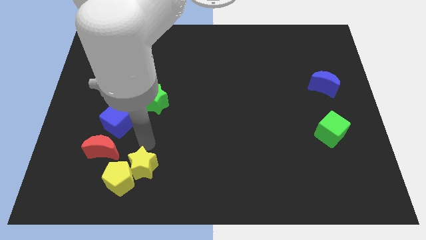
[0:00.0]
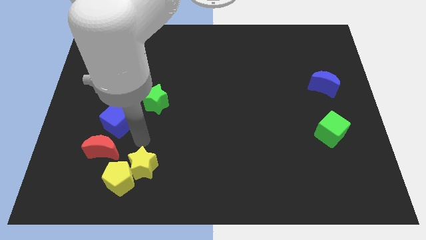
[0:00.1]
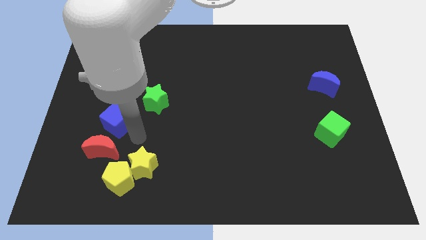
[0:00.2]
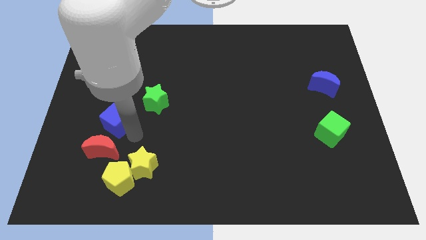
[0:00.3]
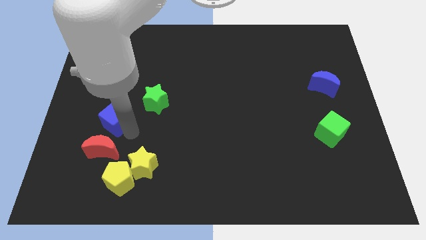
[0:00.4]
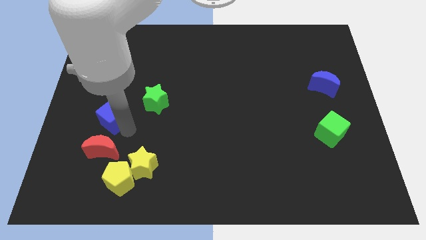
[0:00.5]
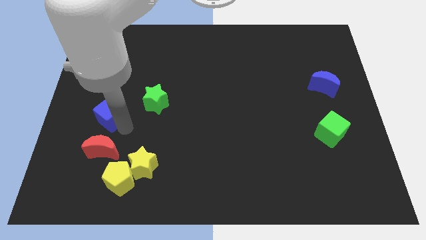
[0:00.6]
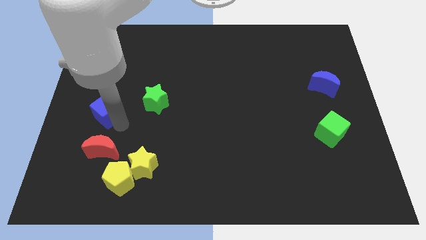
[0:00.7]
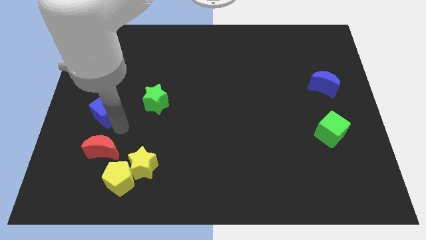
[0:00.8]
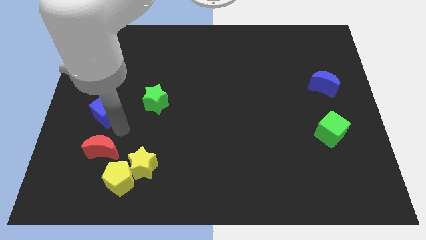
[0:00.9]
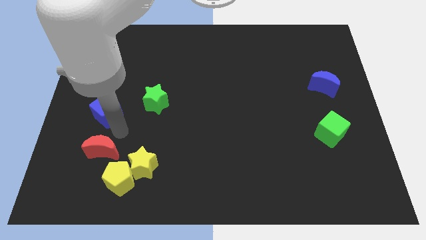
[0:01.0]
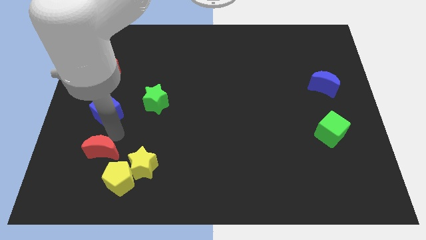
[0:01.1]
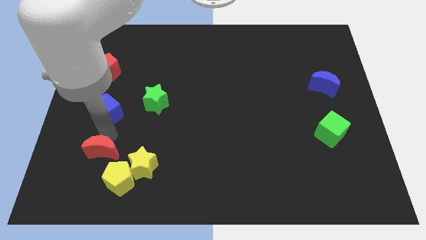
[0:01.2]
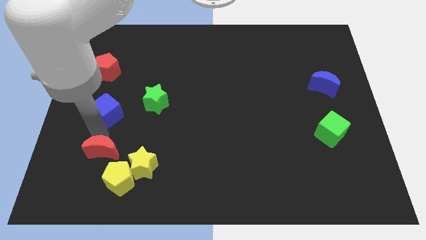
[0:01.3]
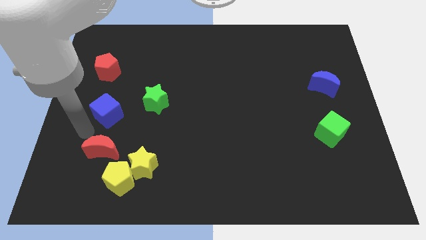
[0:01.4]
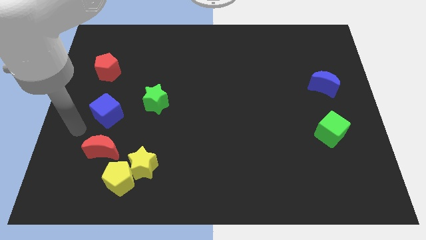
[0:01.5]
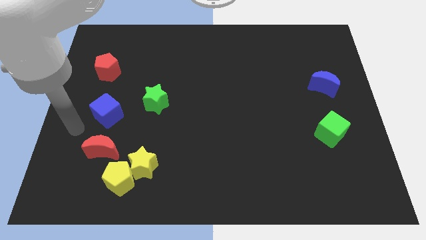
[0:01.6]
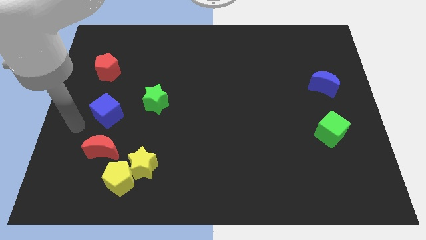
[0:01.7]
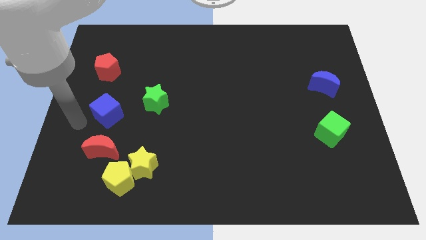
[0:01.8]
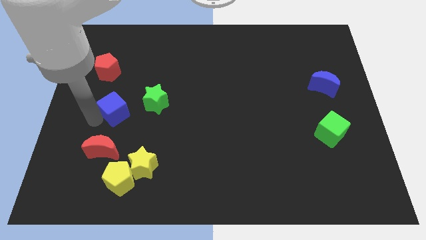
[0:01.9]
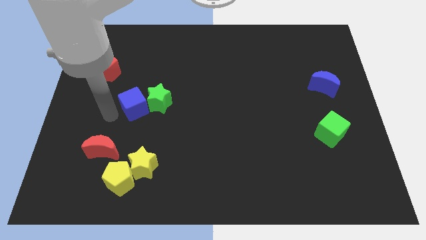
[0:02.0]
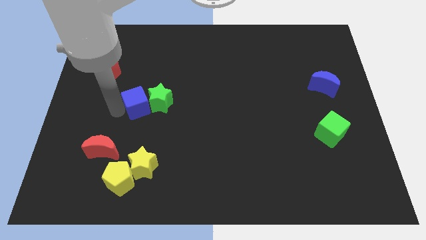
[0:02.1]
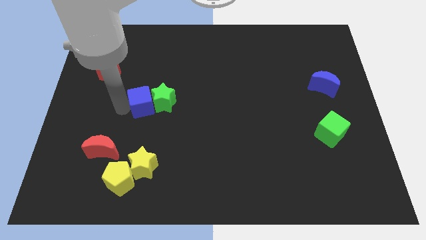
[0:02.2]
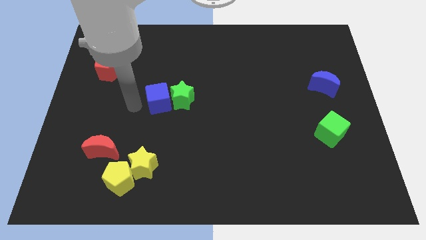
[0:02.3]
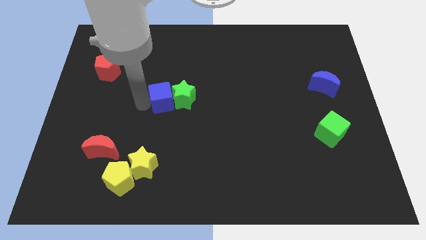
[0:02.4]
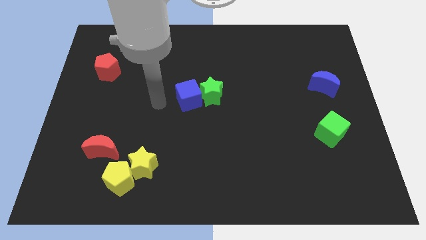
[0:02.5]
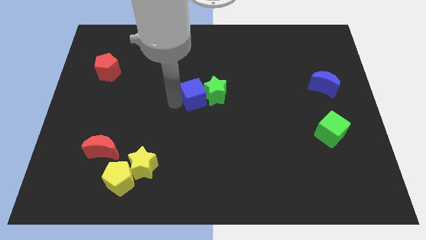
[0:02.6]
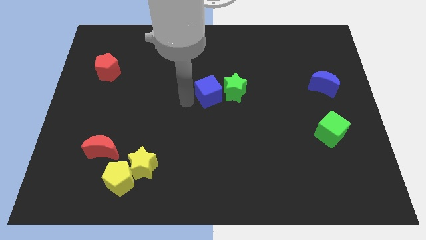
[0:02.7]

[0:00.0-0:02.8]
push the blue cube to the center of the board

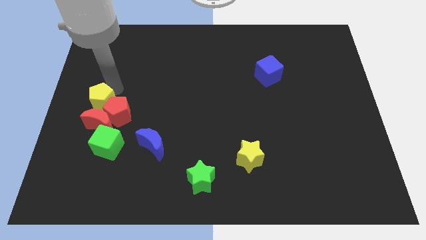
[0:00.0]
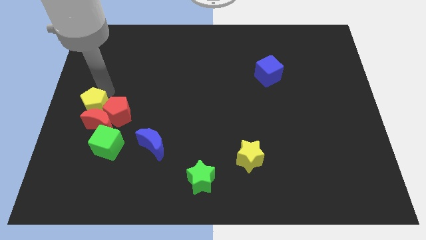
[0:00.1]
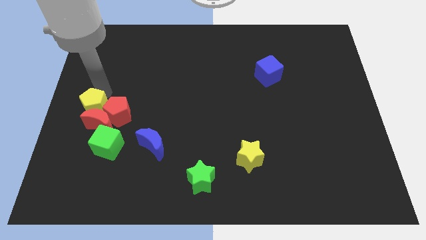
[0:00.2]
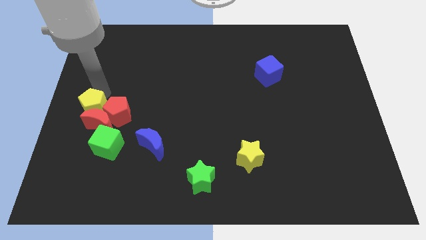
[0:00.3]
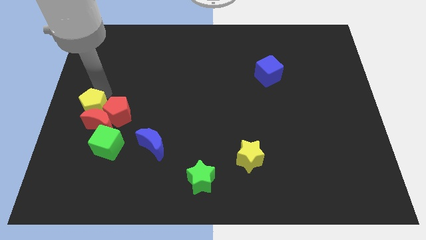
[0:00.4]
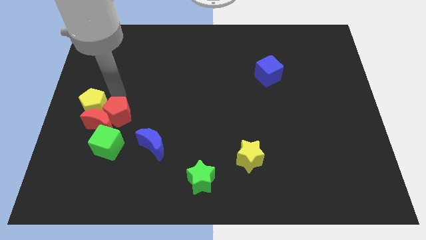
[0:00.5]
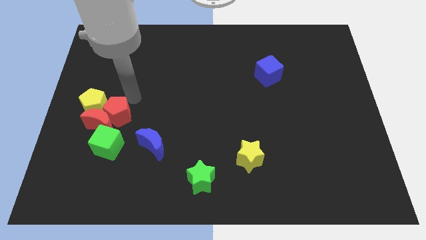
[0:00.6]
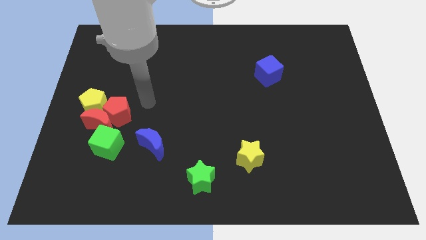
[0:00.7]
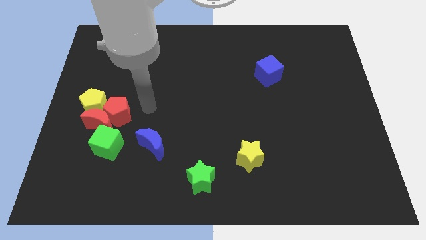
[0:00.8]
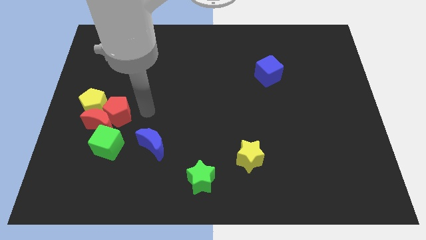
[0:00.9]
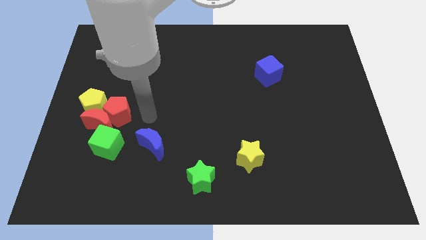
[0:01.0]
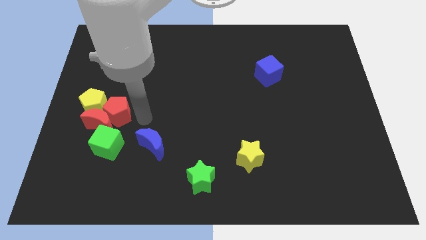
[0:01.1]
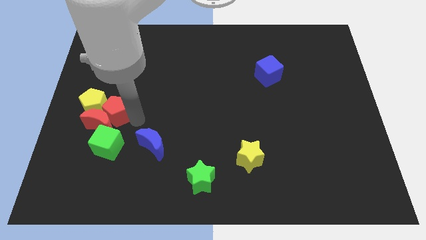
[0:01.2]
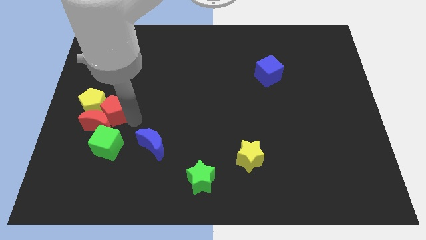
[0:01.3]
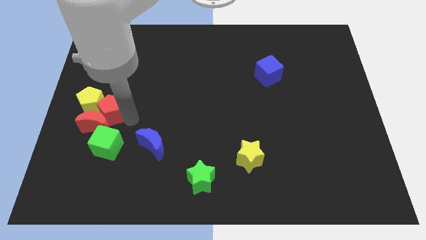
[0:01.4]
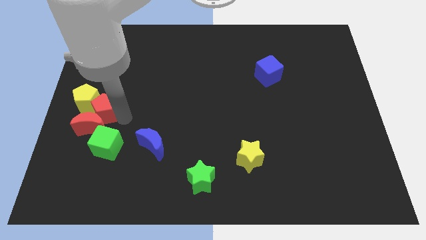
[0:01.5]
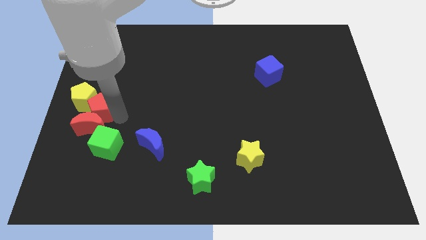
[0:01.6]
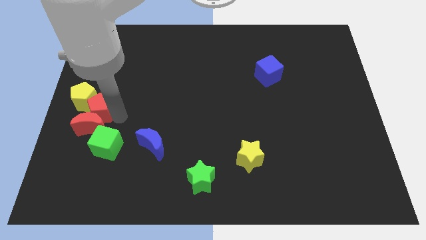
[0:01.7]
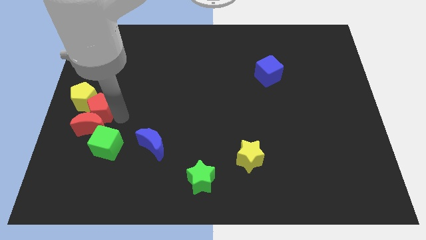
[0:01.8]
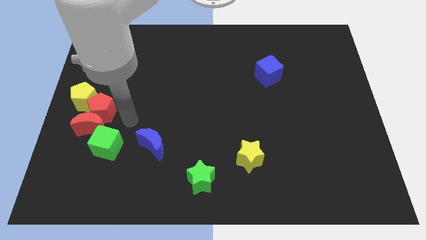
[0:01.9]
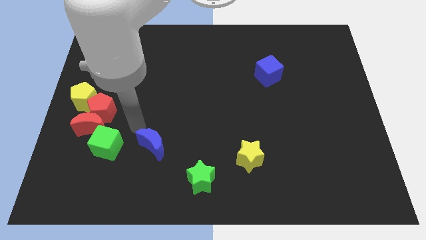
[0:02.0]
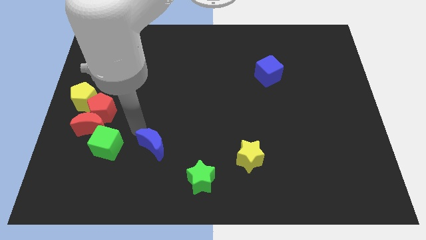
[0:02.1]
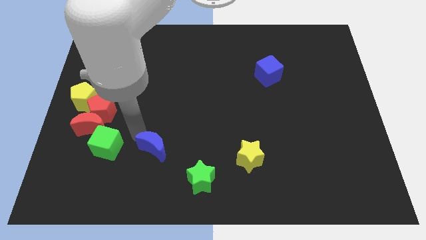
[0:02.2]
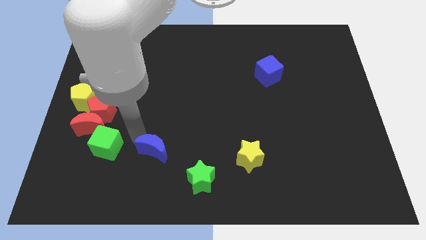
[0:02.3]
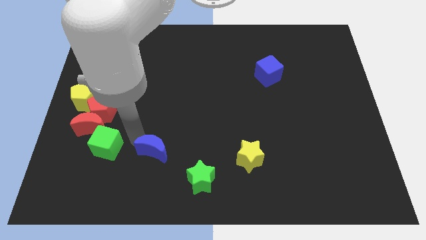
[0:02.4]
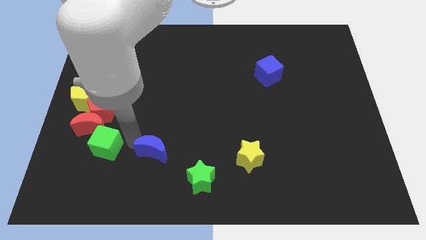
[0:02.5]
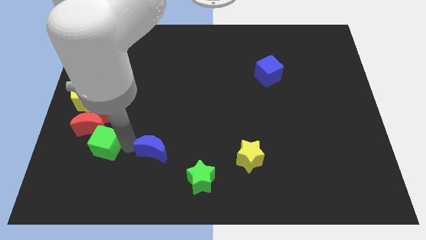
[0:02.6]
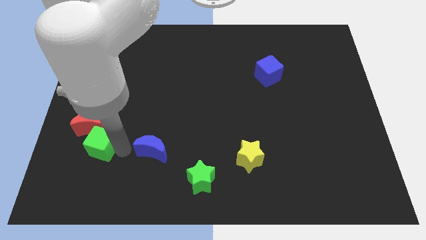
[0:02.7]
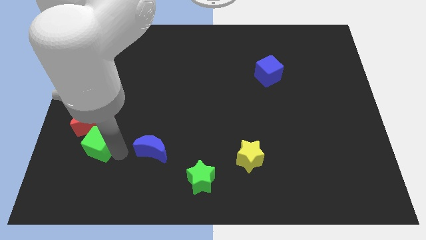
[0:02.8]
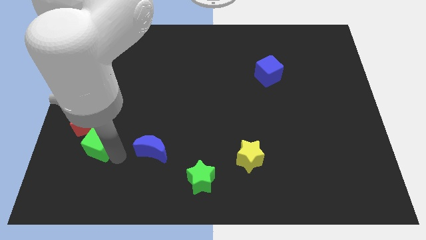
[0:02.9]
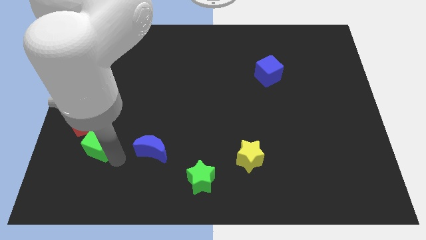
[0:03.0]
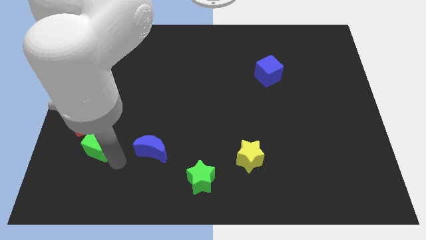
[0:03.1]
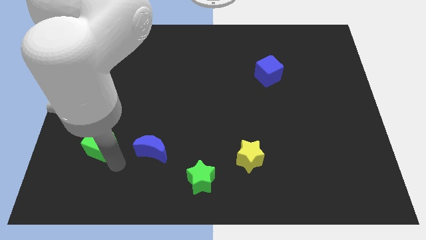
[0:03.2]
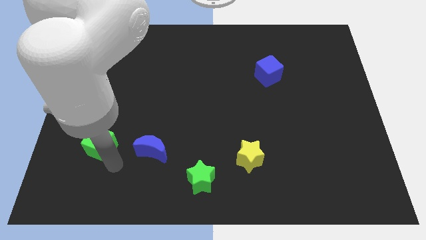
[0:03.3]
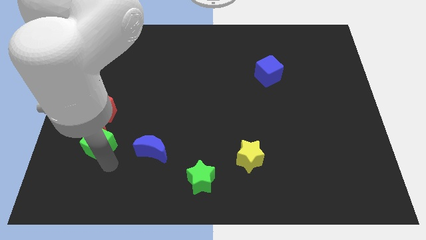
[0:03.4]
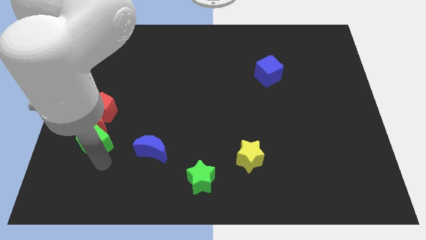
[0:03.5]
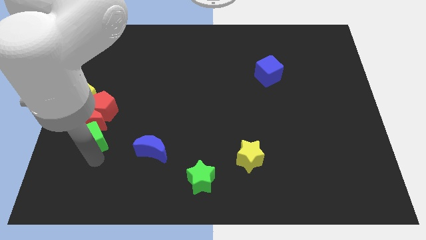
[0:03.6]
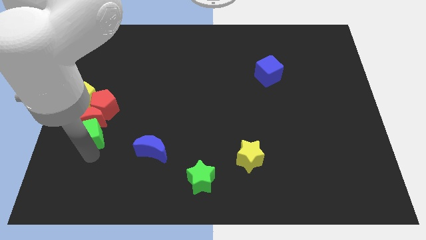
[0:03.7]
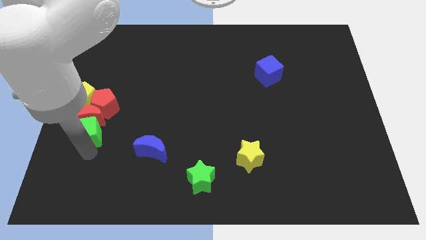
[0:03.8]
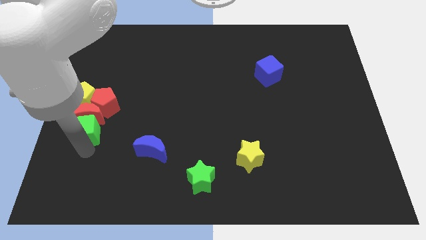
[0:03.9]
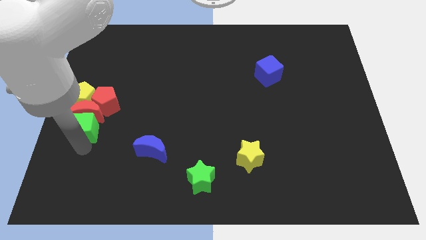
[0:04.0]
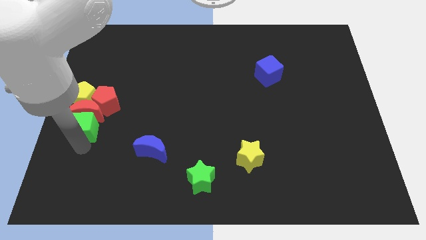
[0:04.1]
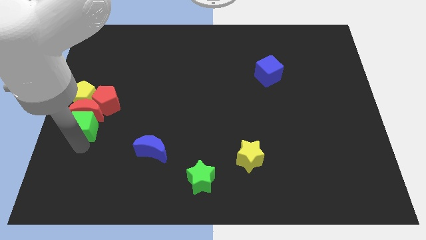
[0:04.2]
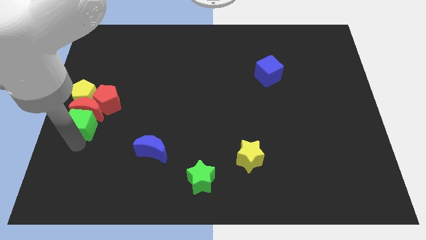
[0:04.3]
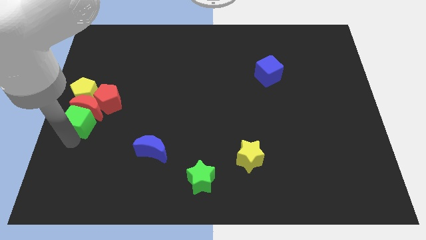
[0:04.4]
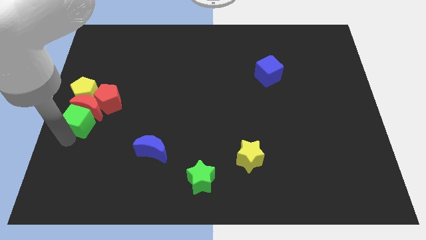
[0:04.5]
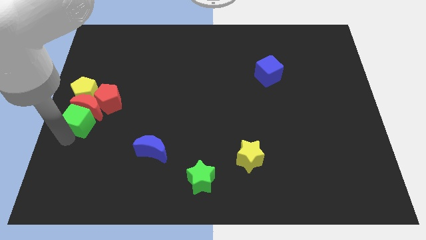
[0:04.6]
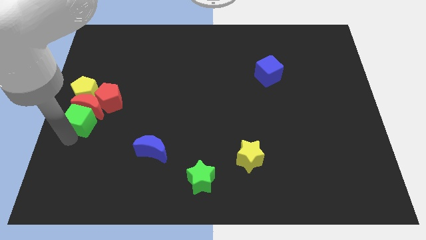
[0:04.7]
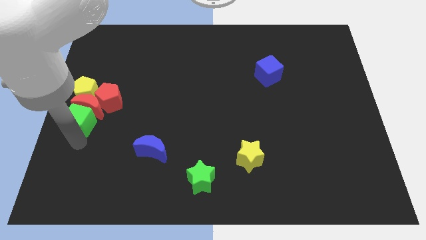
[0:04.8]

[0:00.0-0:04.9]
move the group of blocks to the top of the board

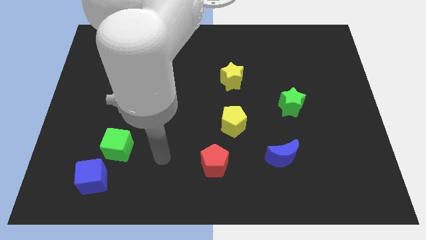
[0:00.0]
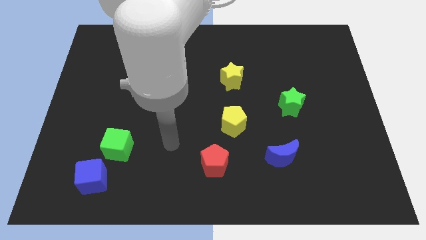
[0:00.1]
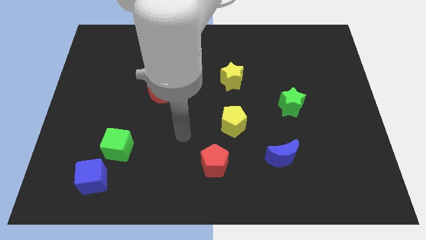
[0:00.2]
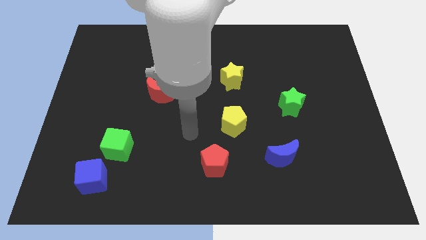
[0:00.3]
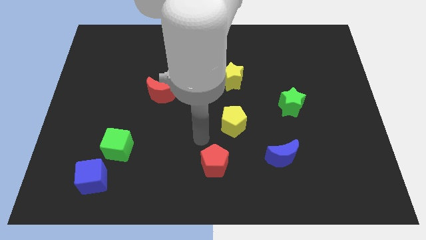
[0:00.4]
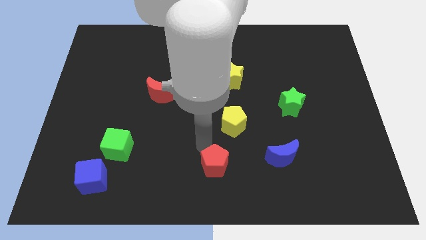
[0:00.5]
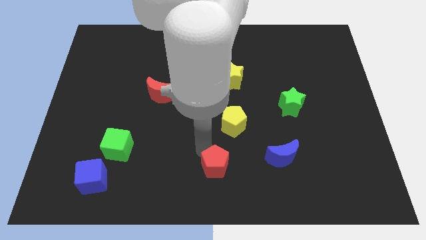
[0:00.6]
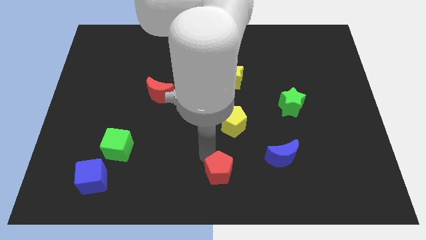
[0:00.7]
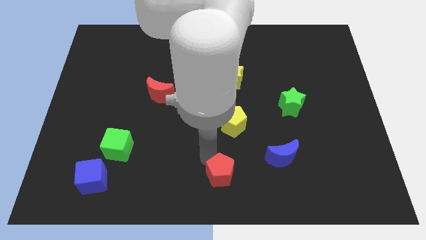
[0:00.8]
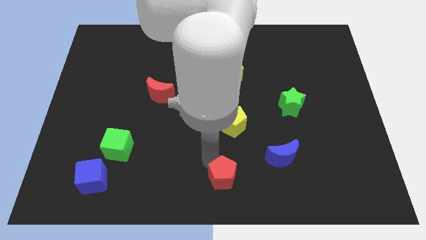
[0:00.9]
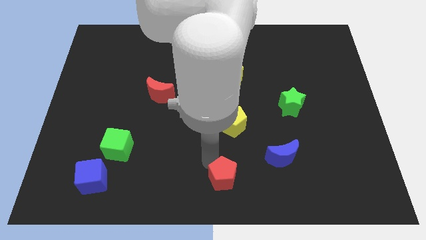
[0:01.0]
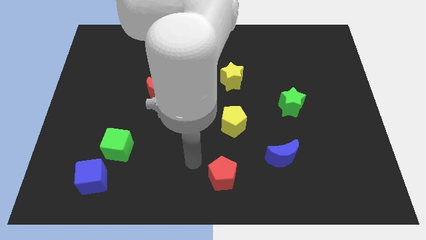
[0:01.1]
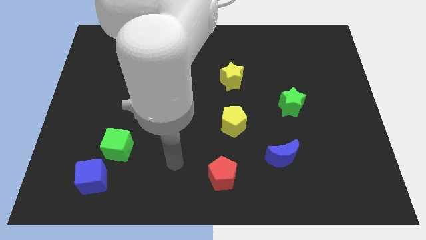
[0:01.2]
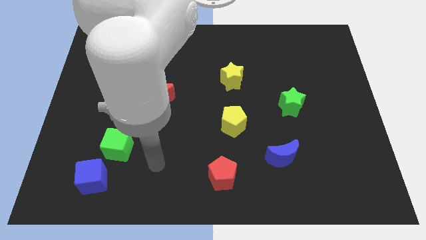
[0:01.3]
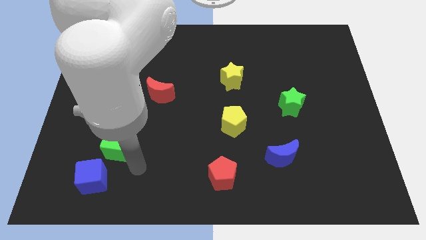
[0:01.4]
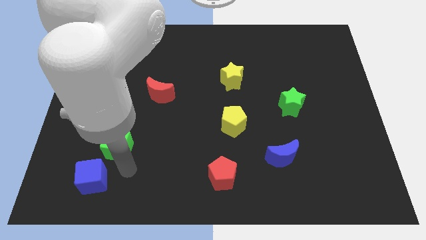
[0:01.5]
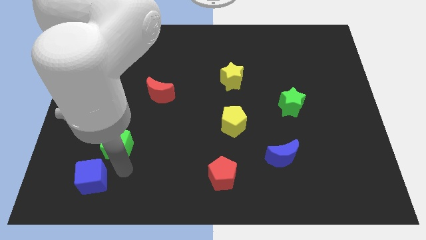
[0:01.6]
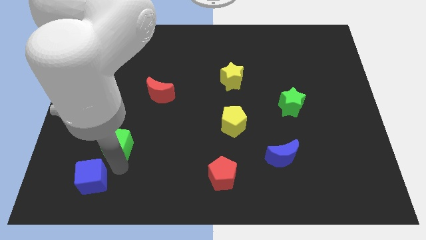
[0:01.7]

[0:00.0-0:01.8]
move the red pentagon to the bottom center
